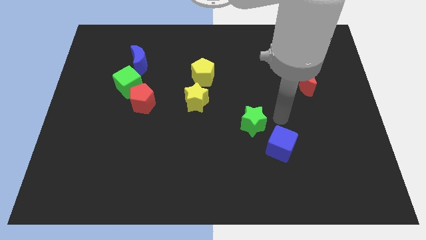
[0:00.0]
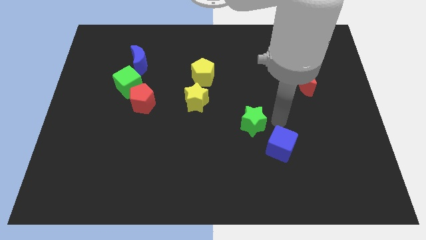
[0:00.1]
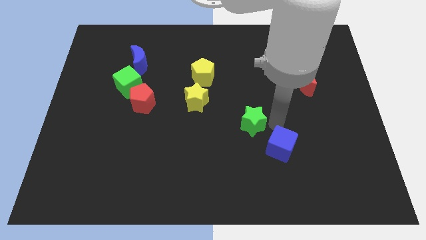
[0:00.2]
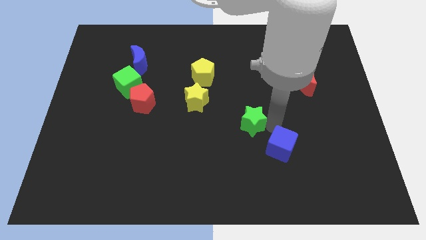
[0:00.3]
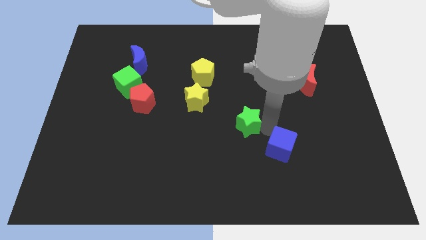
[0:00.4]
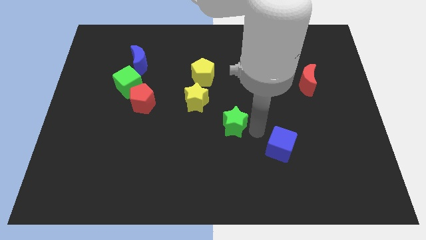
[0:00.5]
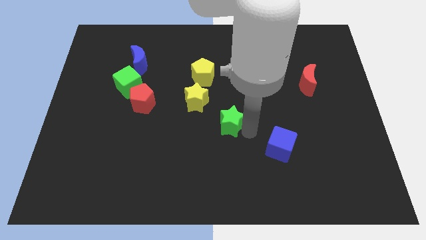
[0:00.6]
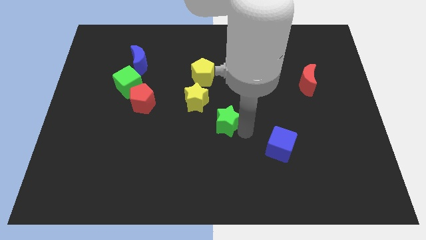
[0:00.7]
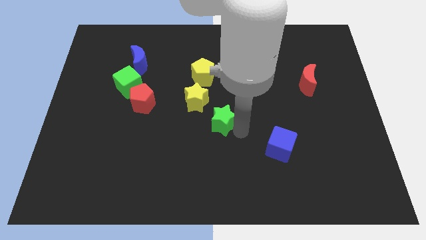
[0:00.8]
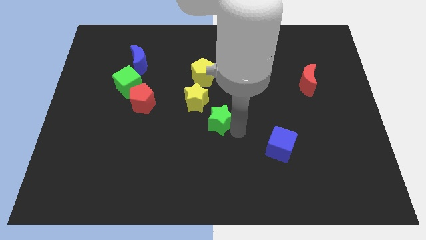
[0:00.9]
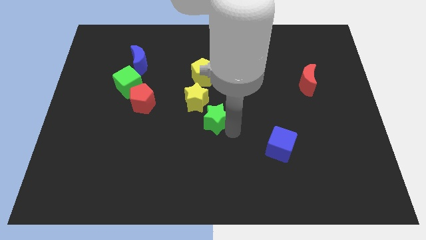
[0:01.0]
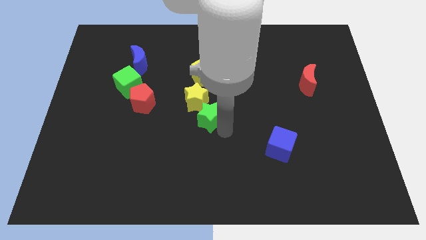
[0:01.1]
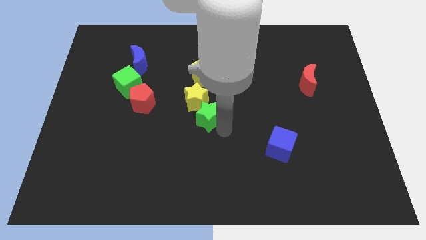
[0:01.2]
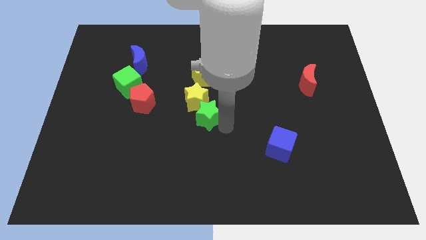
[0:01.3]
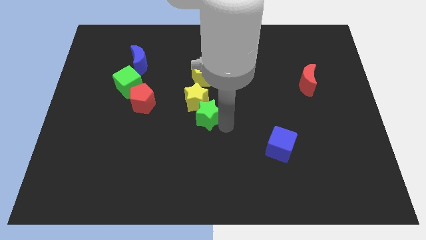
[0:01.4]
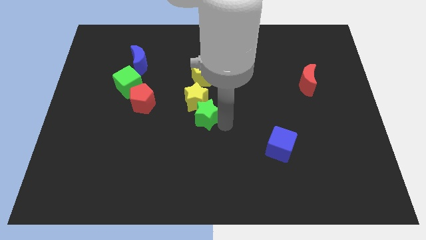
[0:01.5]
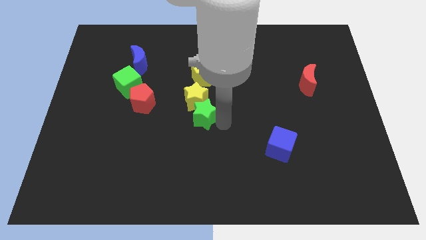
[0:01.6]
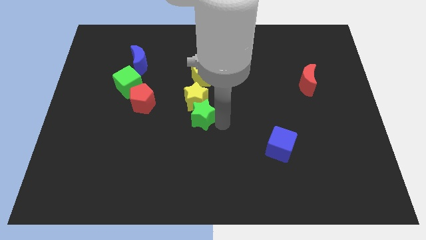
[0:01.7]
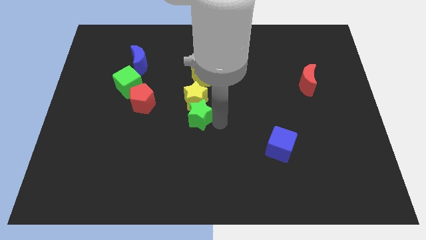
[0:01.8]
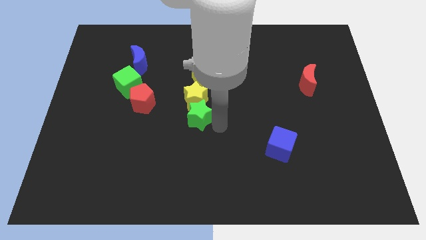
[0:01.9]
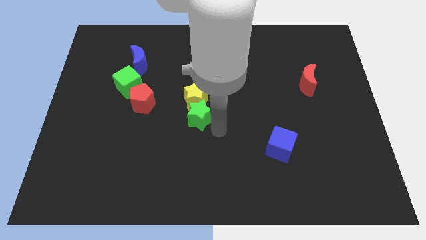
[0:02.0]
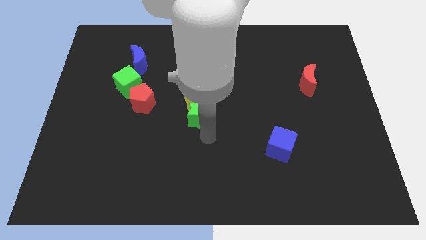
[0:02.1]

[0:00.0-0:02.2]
push the green star into the yellow star

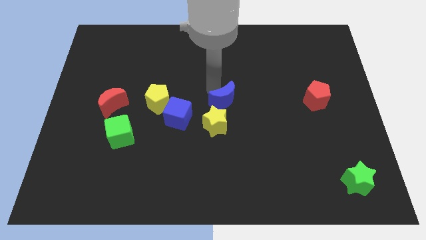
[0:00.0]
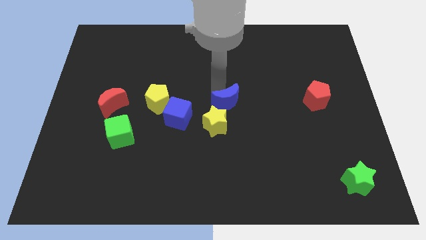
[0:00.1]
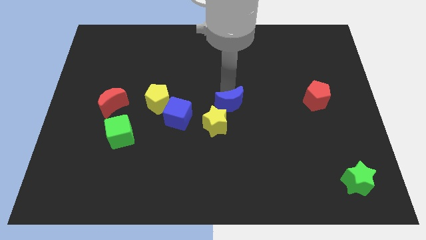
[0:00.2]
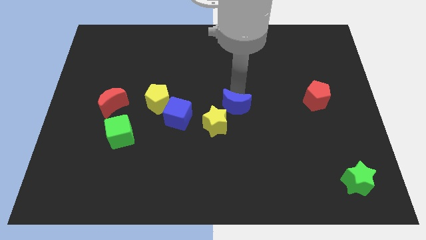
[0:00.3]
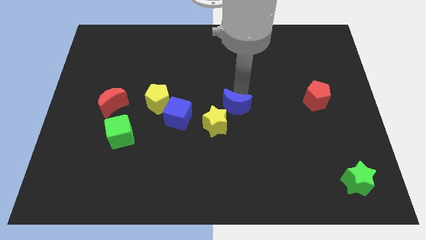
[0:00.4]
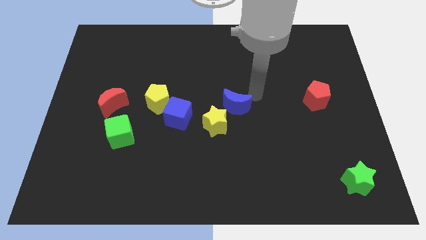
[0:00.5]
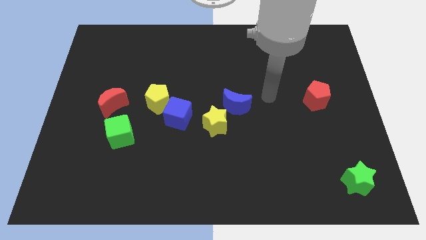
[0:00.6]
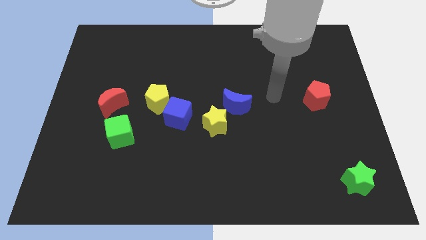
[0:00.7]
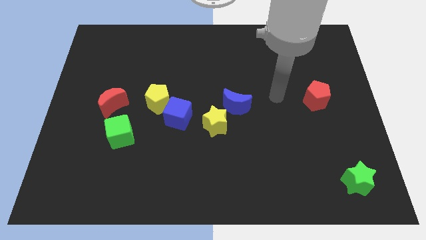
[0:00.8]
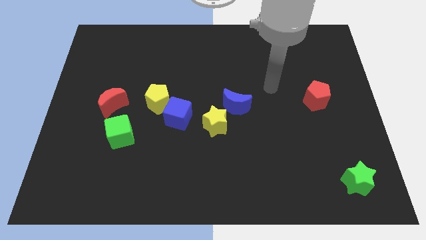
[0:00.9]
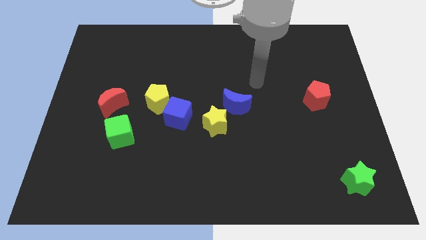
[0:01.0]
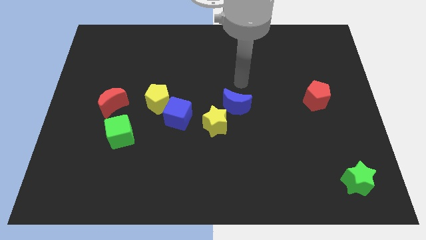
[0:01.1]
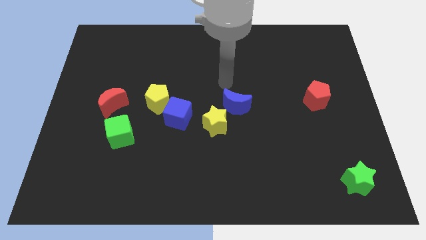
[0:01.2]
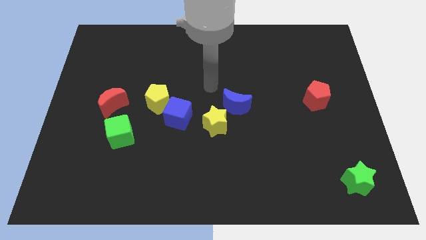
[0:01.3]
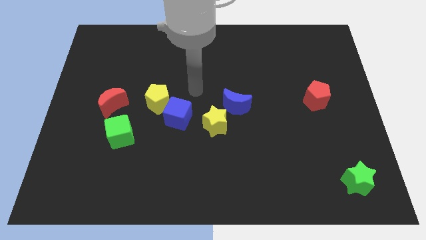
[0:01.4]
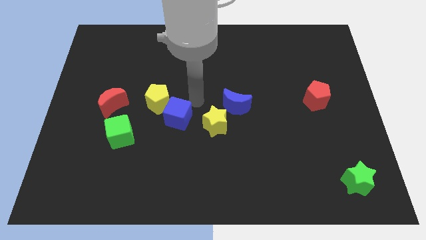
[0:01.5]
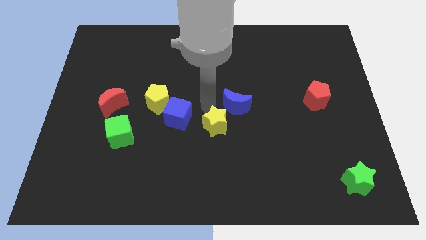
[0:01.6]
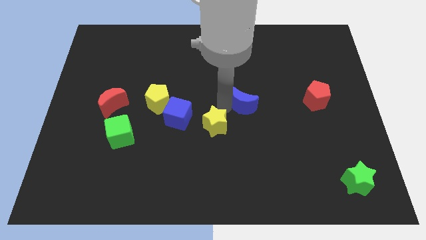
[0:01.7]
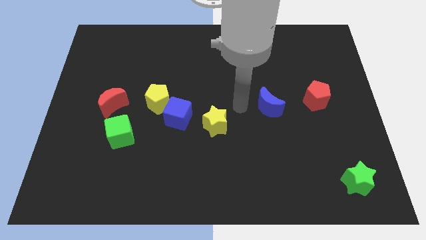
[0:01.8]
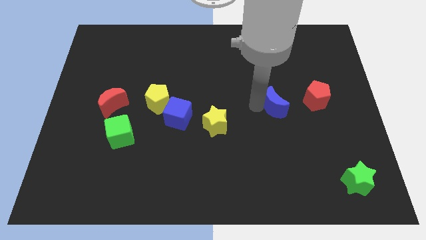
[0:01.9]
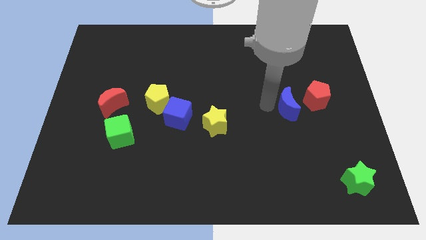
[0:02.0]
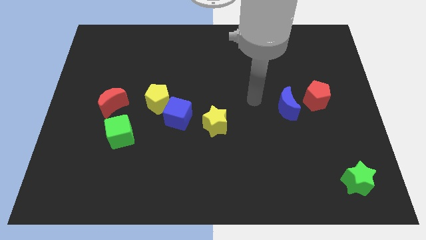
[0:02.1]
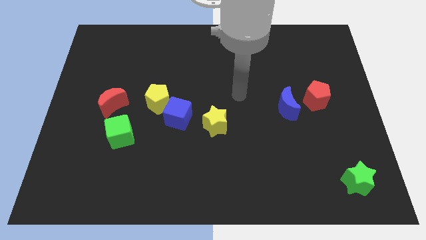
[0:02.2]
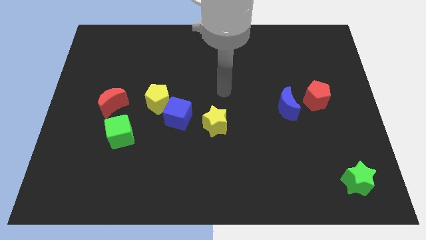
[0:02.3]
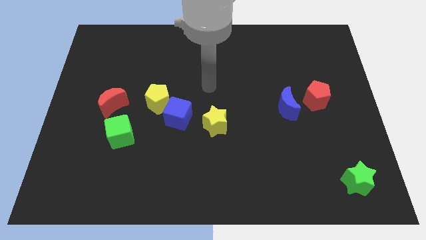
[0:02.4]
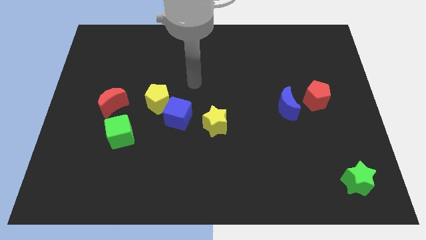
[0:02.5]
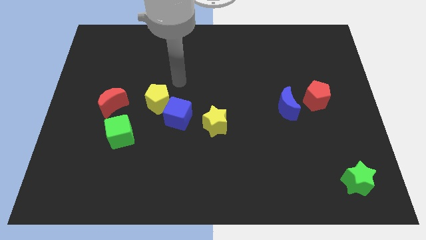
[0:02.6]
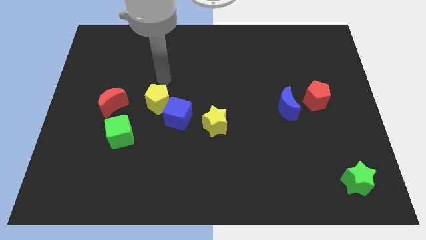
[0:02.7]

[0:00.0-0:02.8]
place the blue crescent at left side of the red pentagon

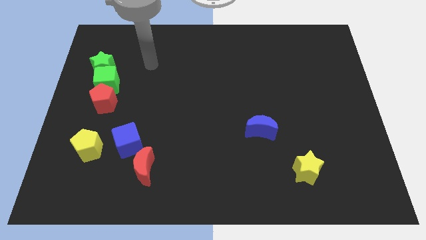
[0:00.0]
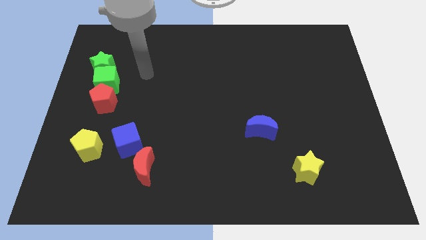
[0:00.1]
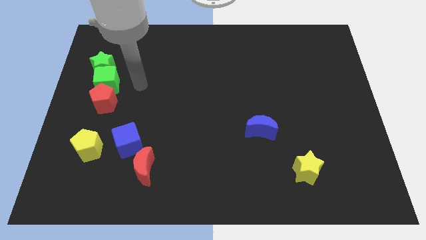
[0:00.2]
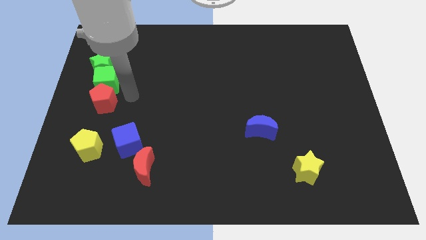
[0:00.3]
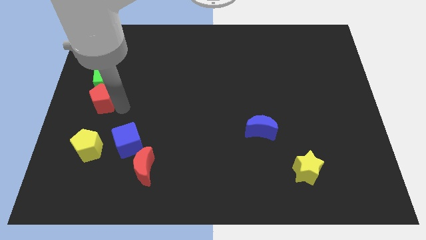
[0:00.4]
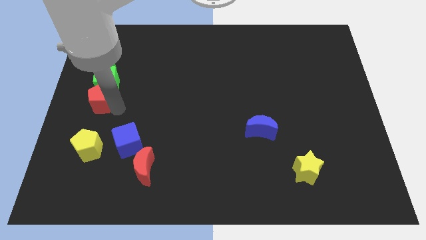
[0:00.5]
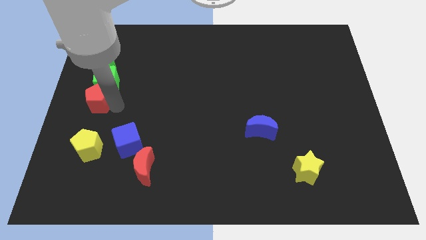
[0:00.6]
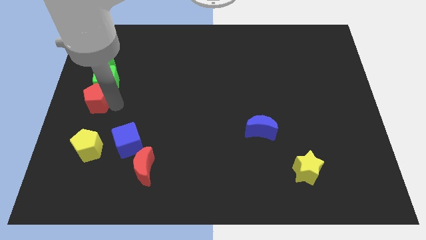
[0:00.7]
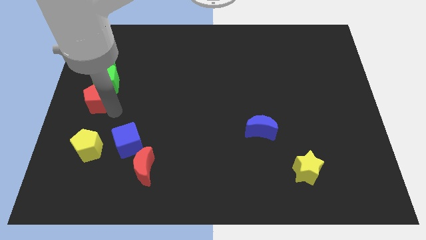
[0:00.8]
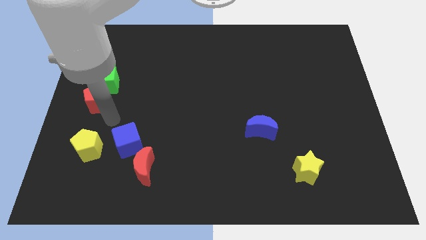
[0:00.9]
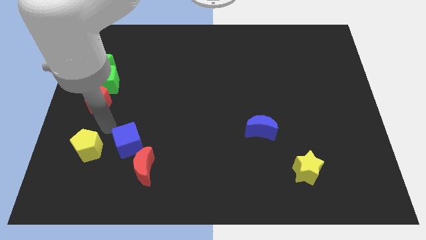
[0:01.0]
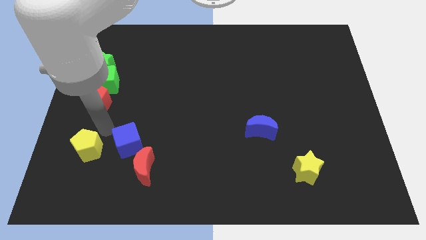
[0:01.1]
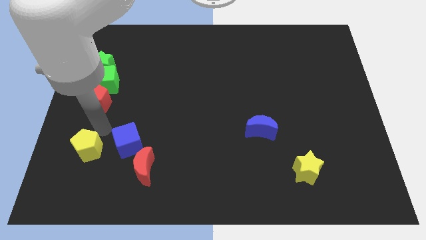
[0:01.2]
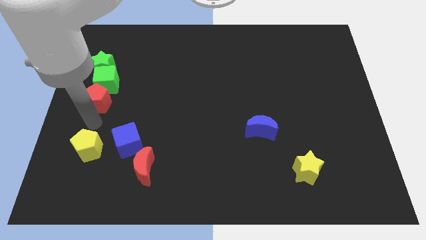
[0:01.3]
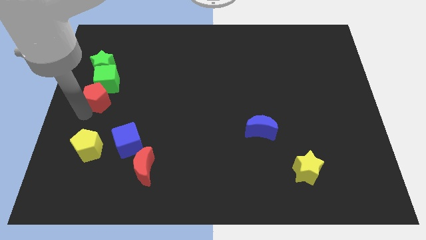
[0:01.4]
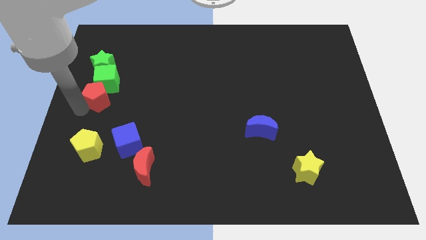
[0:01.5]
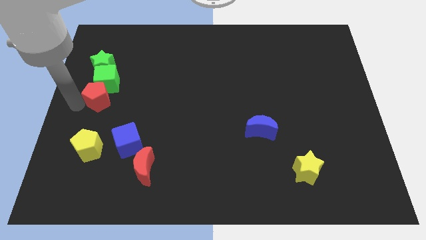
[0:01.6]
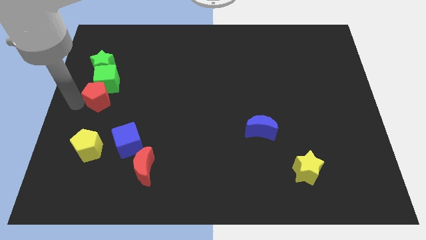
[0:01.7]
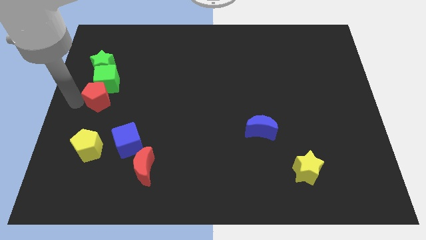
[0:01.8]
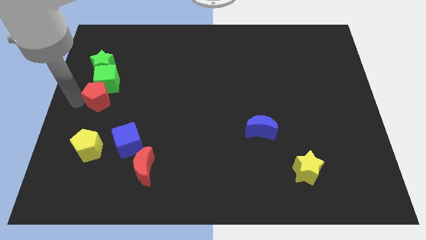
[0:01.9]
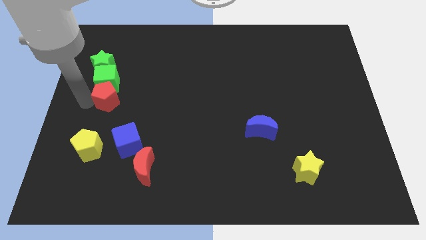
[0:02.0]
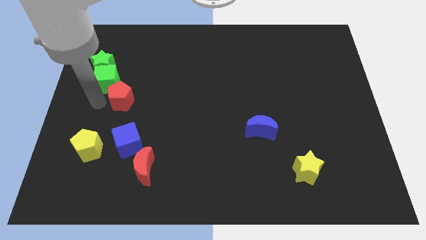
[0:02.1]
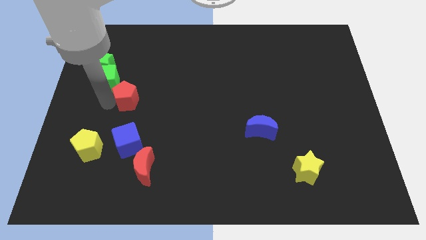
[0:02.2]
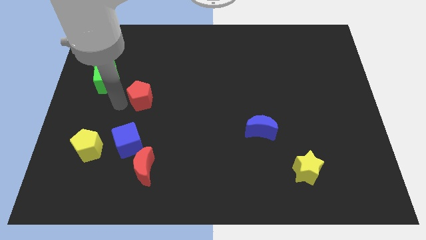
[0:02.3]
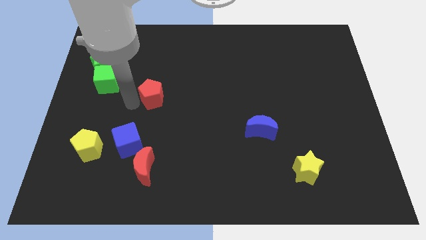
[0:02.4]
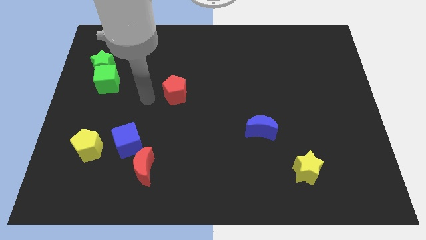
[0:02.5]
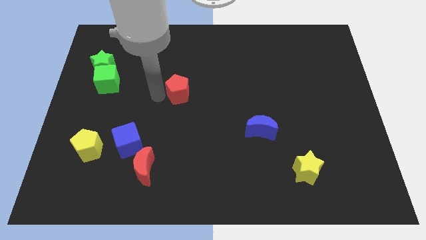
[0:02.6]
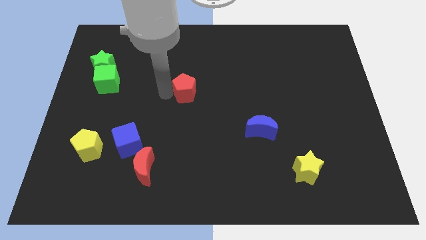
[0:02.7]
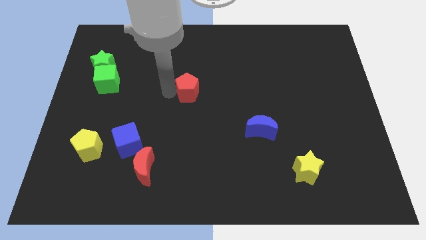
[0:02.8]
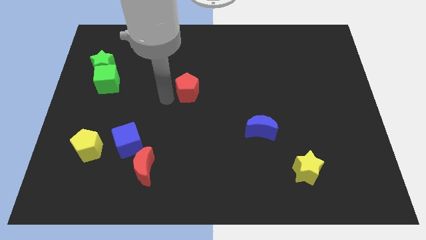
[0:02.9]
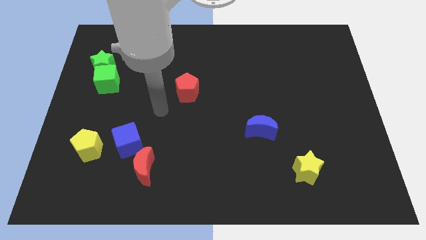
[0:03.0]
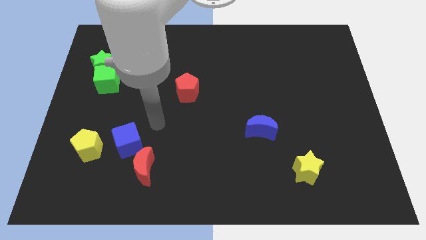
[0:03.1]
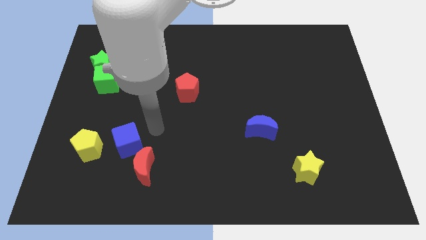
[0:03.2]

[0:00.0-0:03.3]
move the red pentagon towards center of board

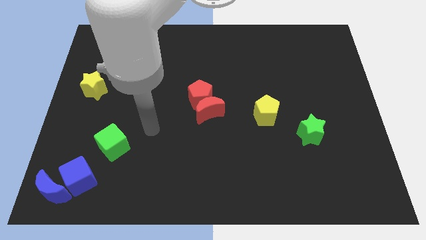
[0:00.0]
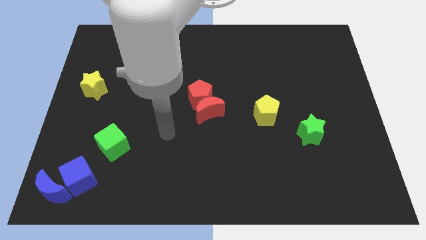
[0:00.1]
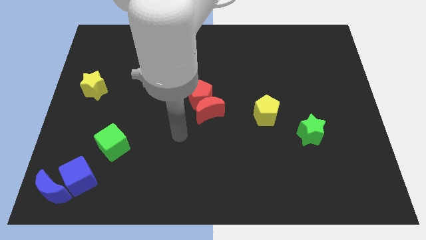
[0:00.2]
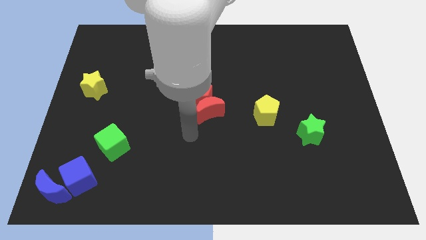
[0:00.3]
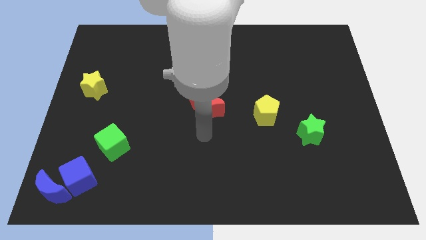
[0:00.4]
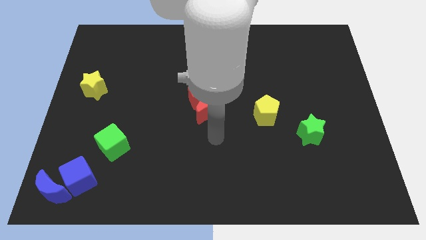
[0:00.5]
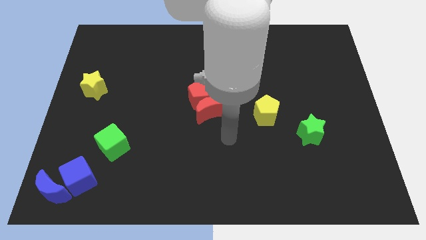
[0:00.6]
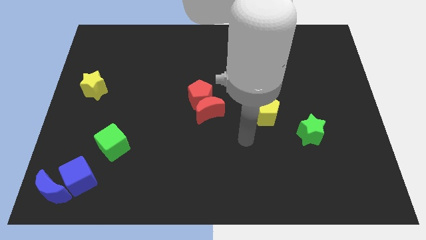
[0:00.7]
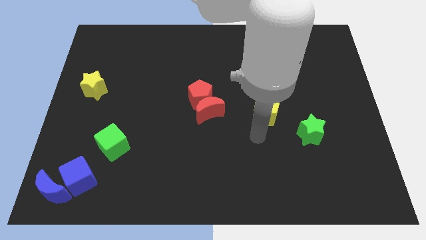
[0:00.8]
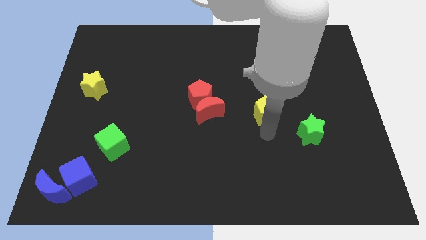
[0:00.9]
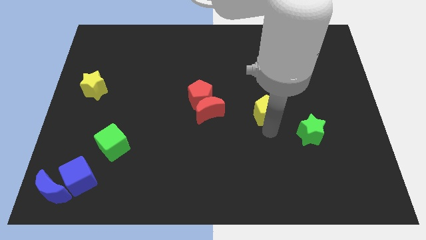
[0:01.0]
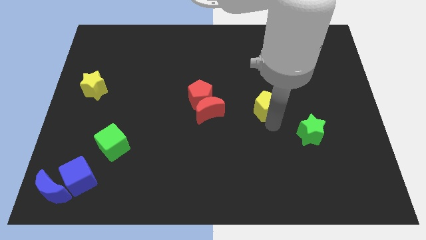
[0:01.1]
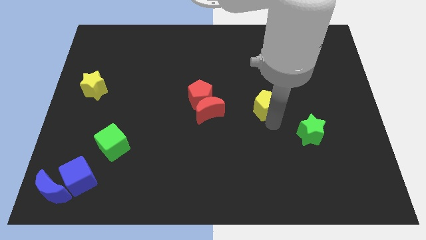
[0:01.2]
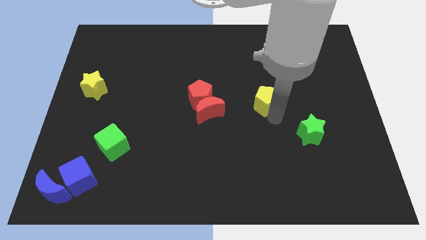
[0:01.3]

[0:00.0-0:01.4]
place the yellow pentagon parallel to red moon
